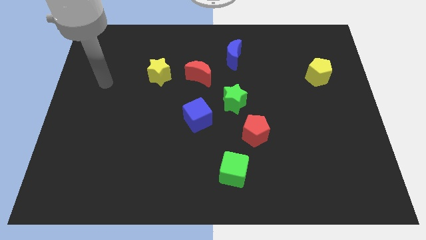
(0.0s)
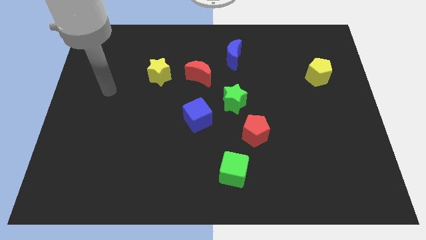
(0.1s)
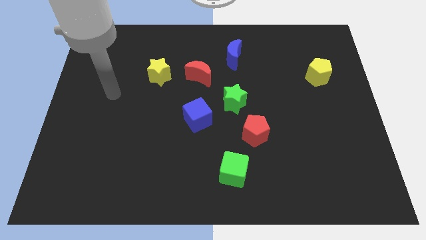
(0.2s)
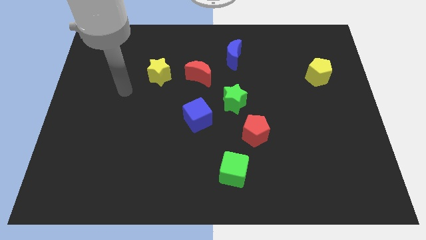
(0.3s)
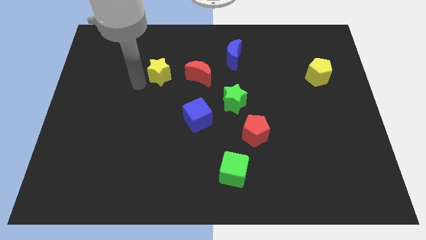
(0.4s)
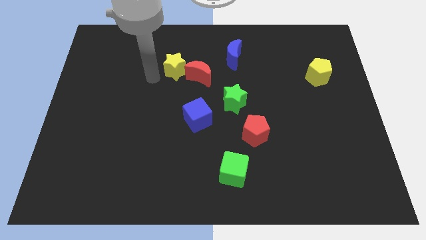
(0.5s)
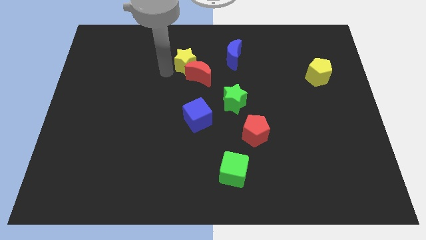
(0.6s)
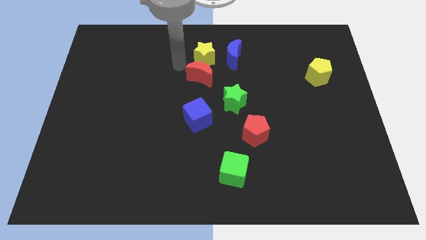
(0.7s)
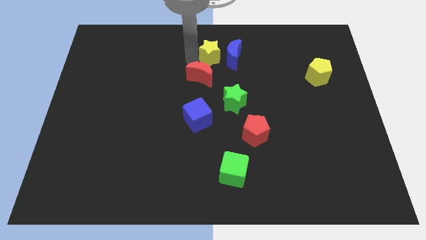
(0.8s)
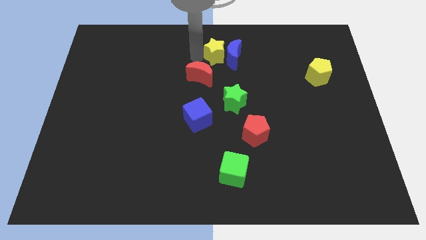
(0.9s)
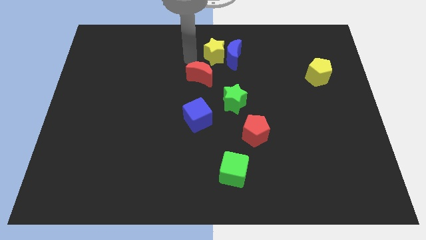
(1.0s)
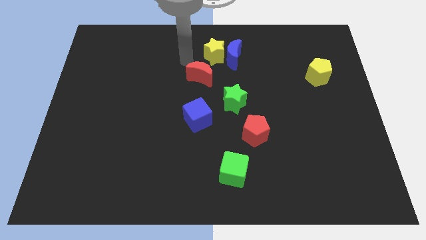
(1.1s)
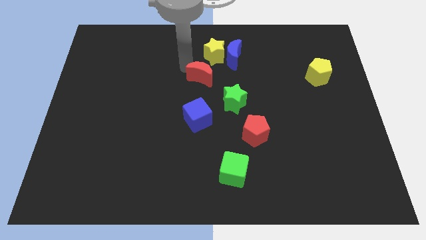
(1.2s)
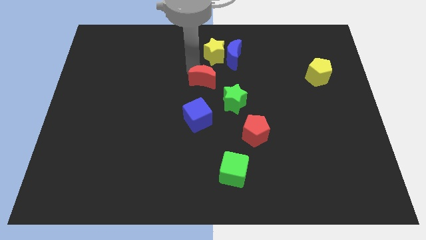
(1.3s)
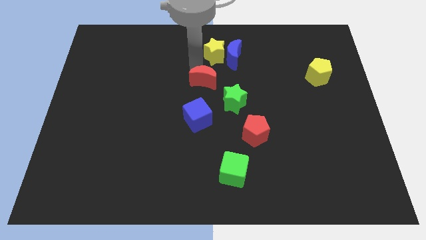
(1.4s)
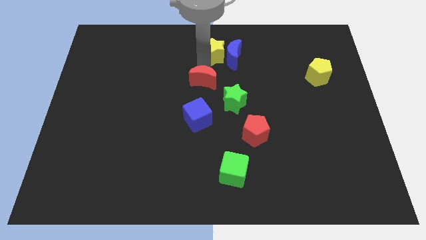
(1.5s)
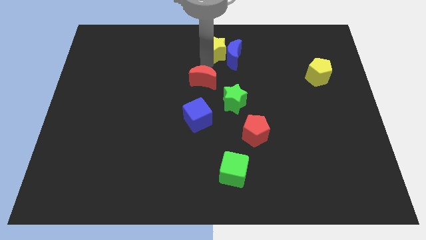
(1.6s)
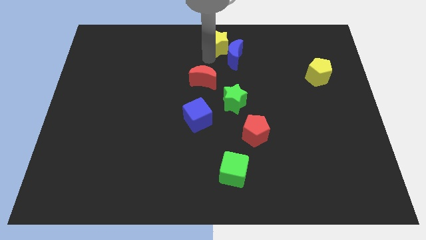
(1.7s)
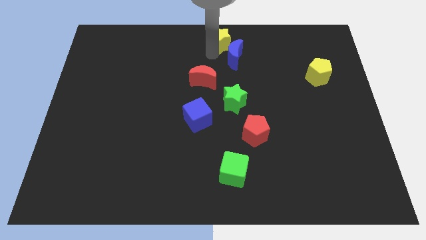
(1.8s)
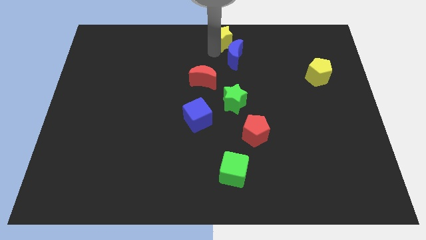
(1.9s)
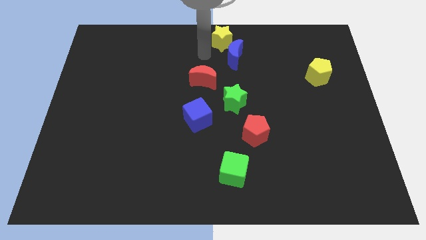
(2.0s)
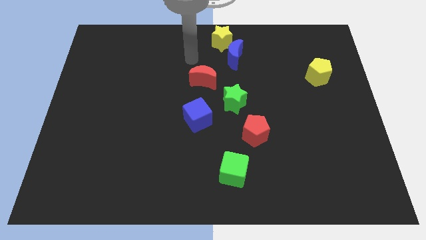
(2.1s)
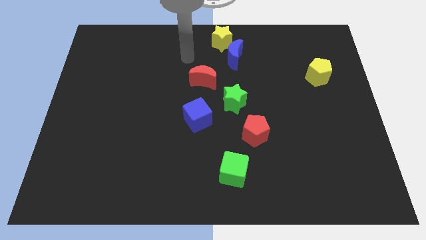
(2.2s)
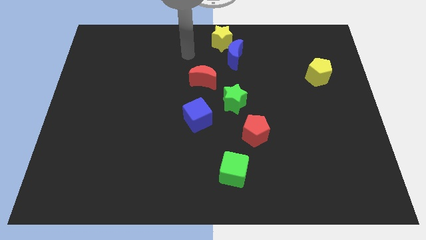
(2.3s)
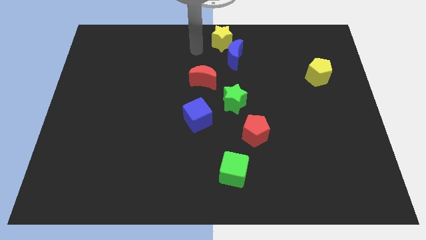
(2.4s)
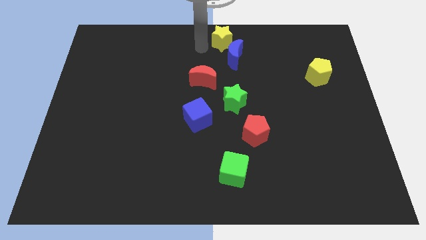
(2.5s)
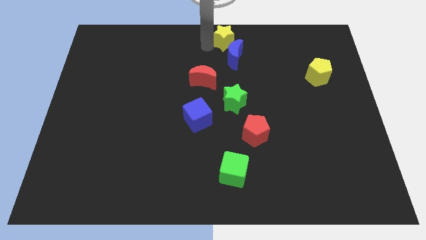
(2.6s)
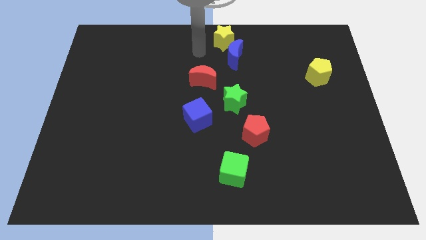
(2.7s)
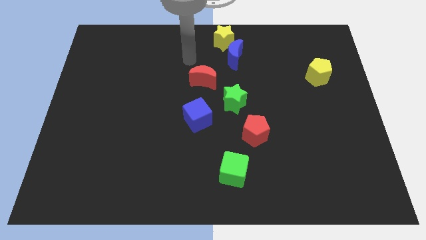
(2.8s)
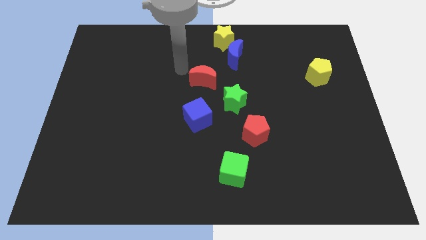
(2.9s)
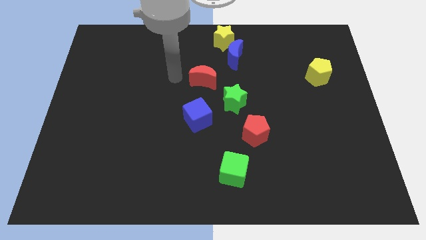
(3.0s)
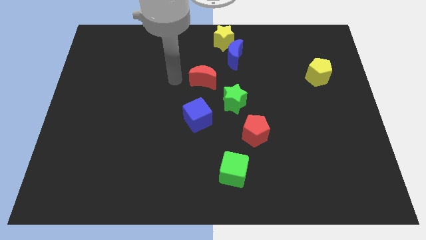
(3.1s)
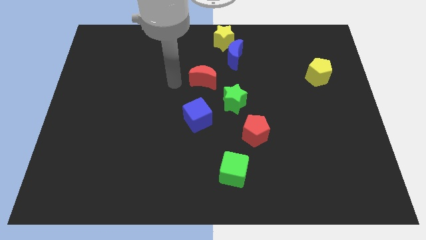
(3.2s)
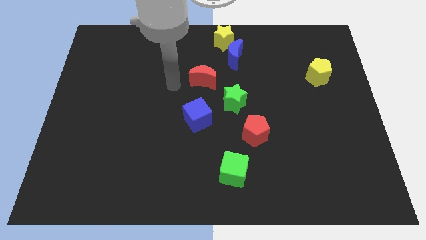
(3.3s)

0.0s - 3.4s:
move the yellow star to top left of the blue moon

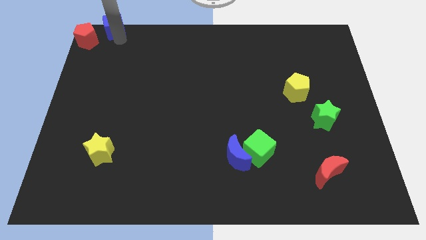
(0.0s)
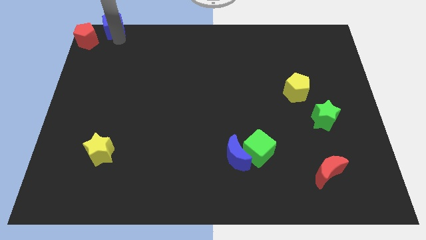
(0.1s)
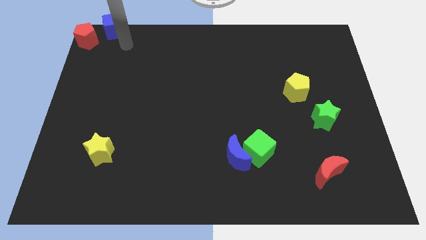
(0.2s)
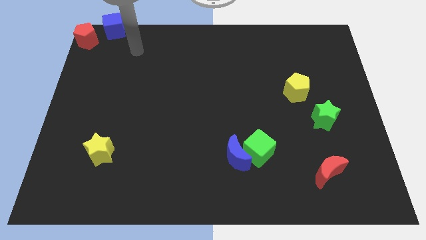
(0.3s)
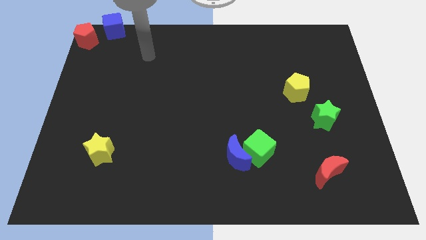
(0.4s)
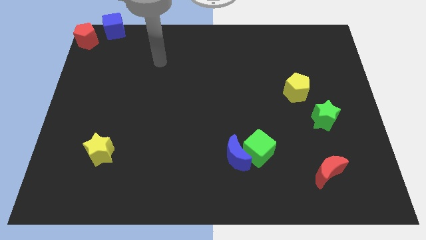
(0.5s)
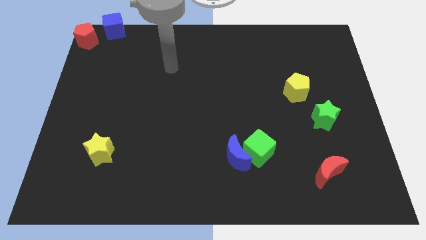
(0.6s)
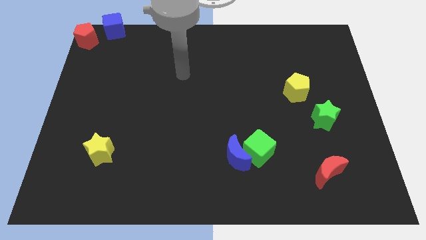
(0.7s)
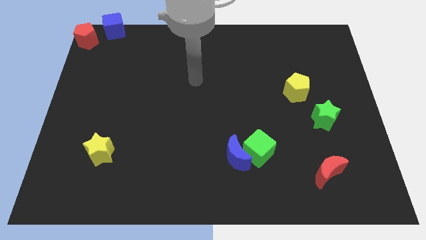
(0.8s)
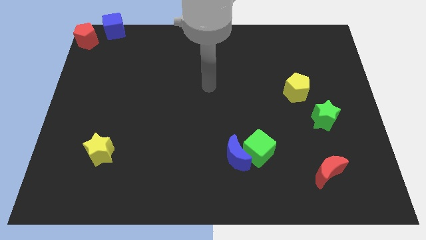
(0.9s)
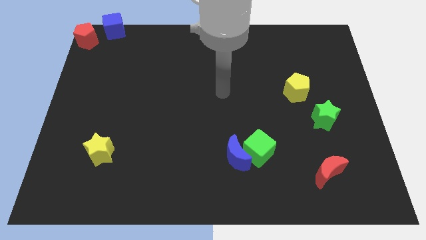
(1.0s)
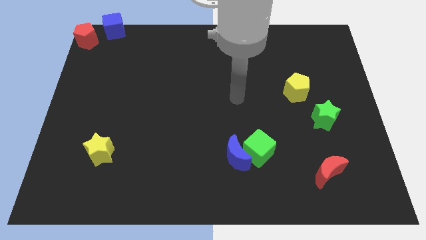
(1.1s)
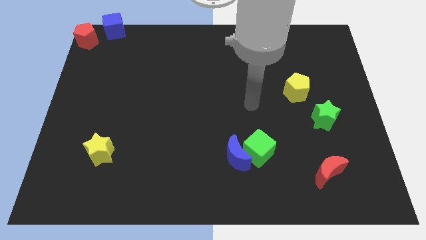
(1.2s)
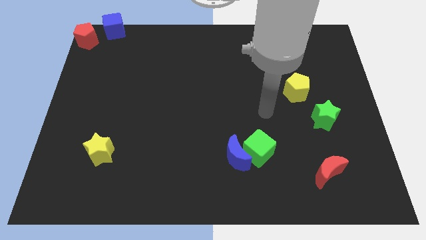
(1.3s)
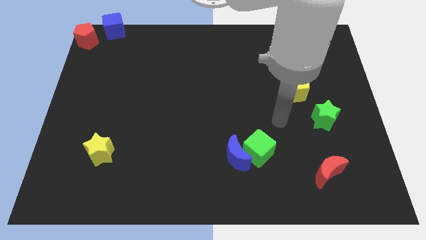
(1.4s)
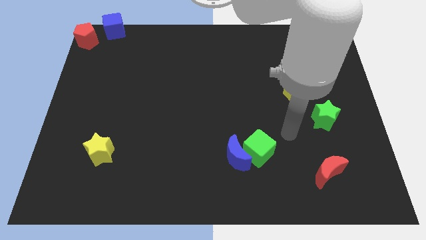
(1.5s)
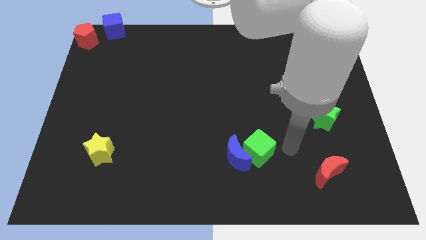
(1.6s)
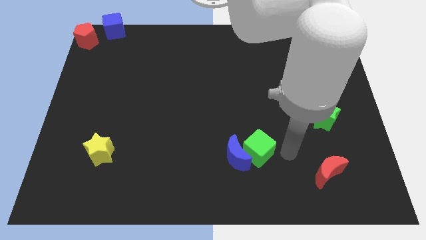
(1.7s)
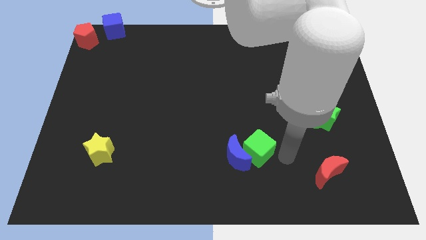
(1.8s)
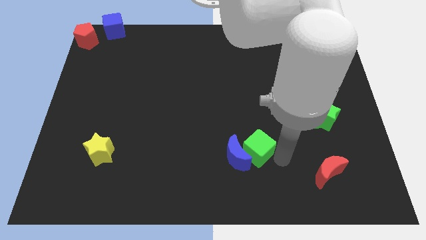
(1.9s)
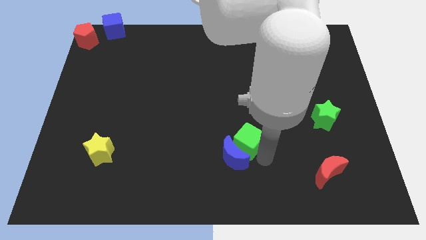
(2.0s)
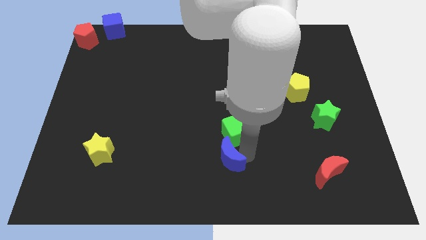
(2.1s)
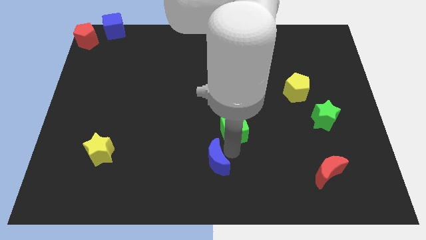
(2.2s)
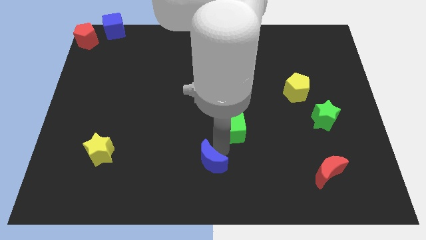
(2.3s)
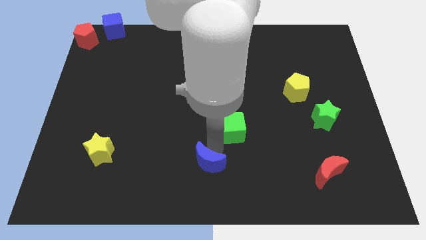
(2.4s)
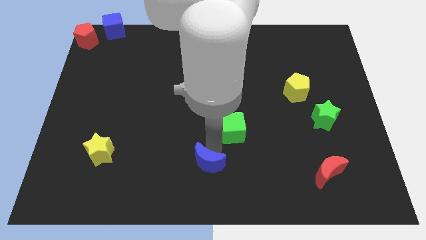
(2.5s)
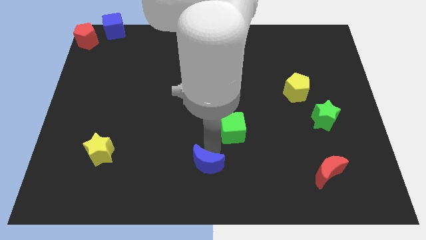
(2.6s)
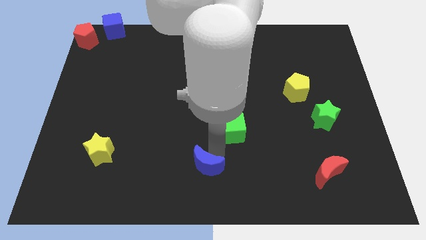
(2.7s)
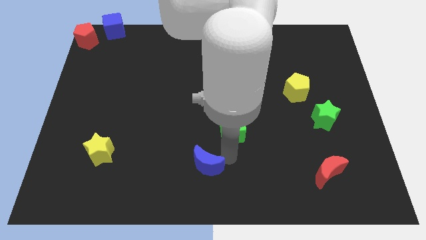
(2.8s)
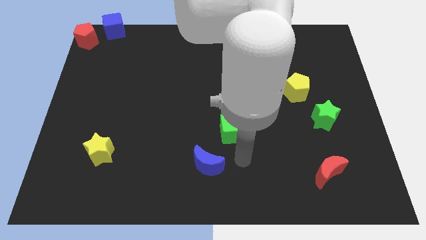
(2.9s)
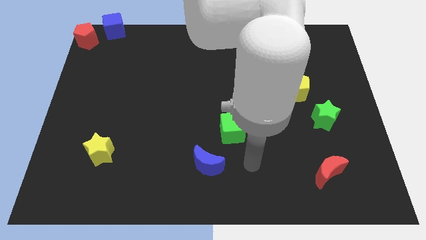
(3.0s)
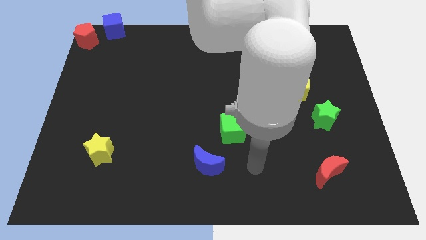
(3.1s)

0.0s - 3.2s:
separate the green cube and blue crescent each others

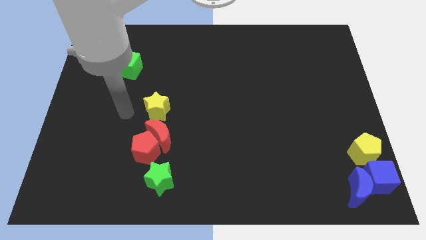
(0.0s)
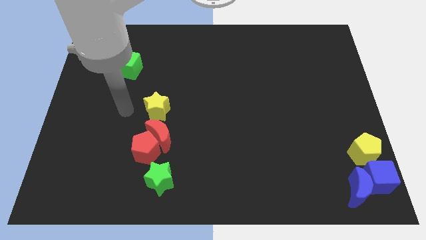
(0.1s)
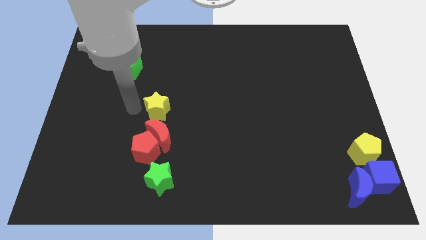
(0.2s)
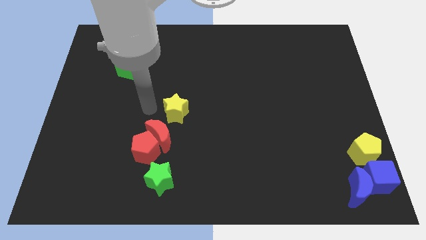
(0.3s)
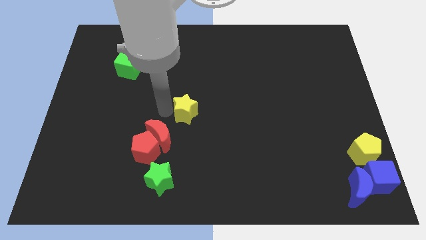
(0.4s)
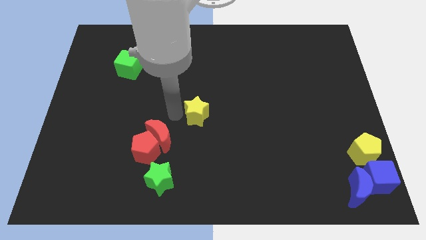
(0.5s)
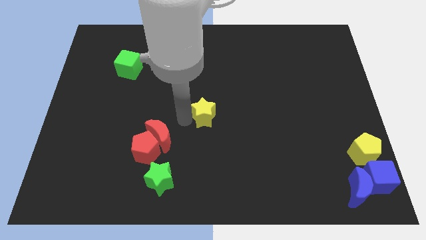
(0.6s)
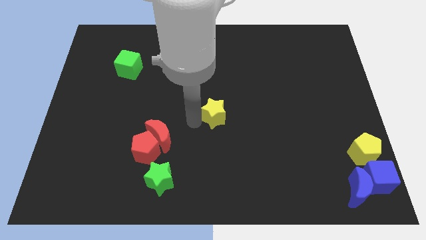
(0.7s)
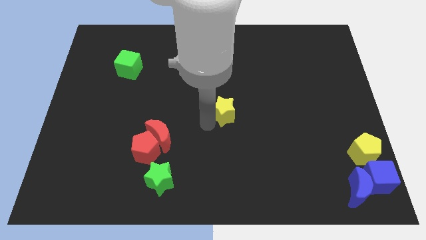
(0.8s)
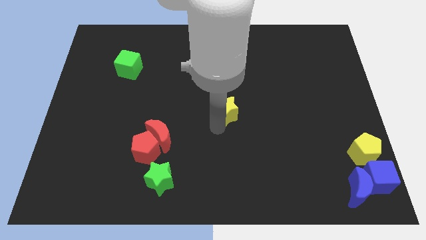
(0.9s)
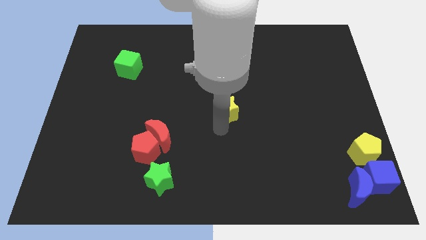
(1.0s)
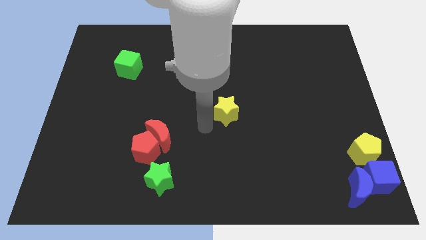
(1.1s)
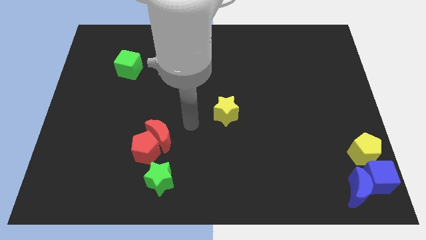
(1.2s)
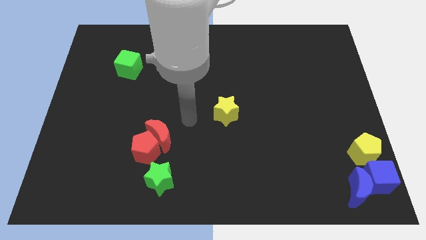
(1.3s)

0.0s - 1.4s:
place yellow star to the center of the board

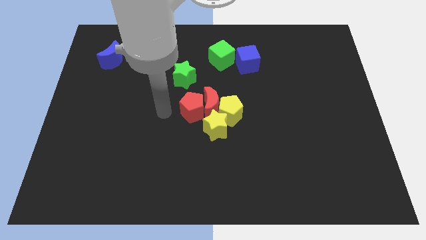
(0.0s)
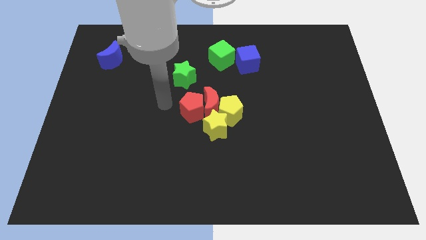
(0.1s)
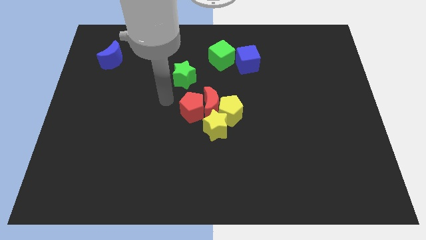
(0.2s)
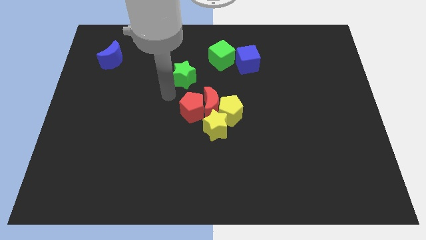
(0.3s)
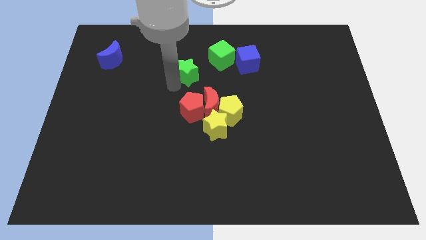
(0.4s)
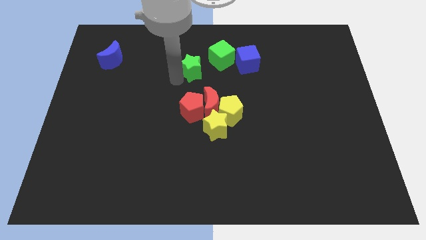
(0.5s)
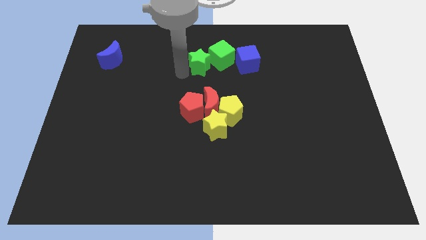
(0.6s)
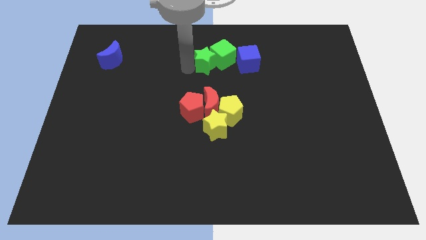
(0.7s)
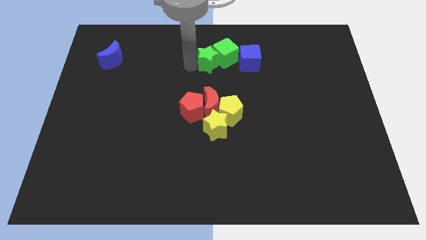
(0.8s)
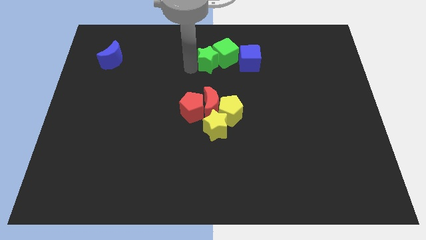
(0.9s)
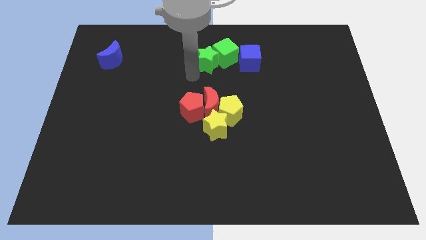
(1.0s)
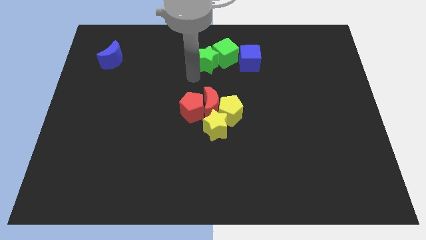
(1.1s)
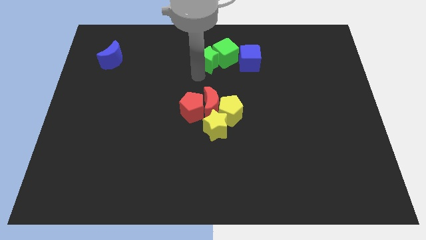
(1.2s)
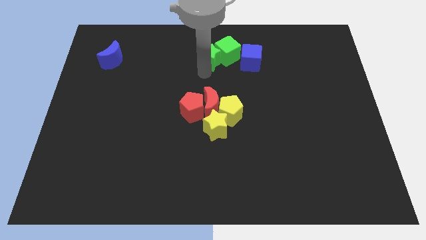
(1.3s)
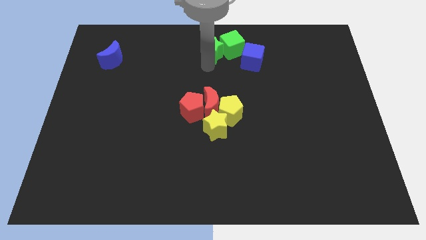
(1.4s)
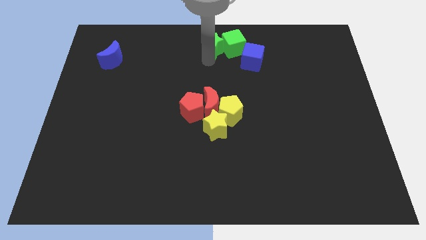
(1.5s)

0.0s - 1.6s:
move the green star to the left of the green cube
